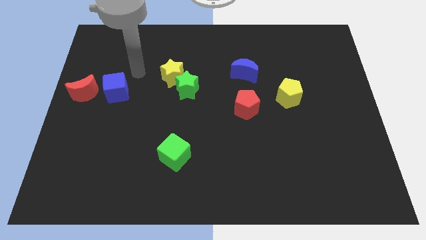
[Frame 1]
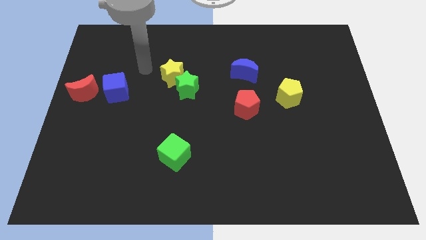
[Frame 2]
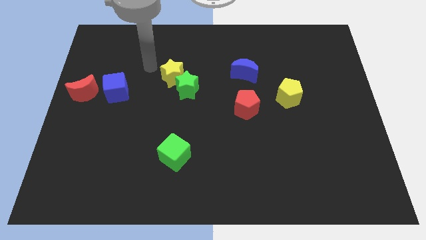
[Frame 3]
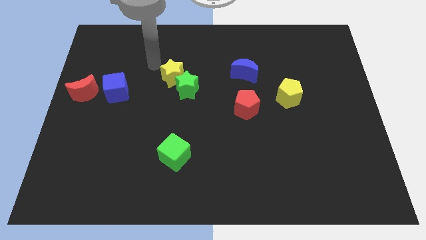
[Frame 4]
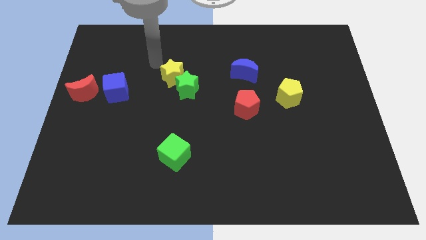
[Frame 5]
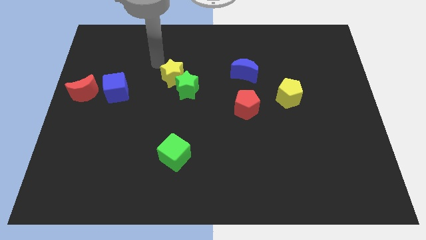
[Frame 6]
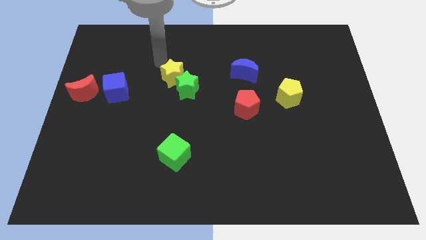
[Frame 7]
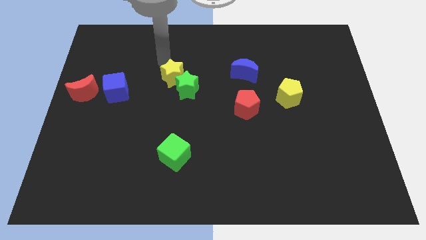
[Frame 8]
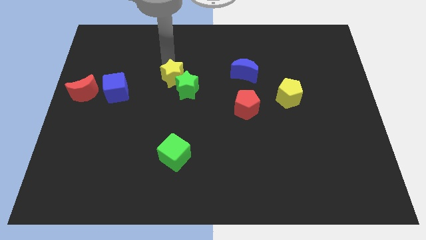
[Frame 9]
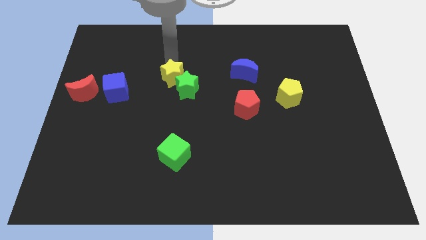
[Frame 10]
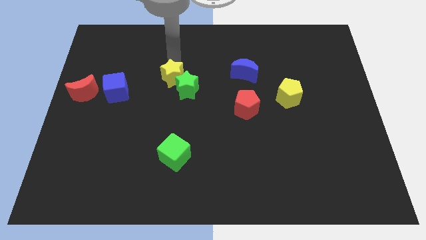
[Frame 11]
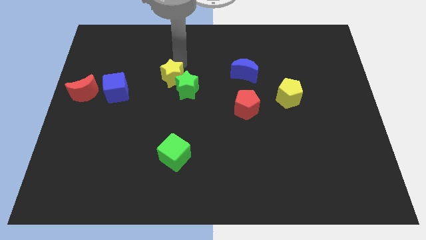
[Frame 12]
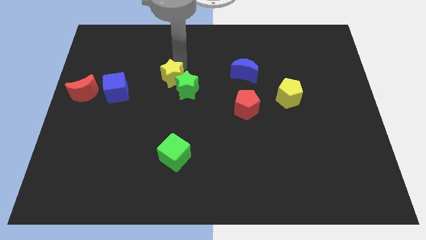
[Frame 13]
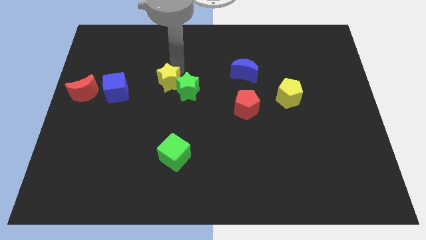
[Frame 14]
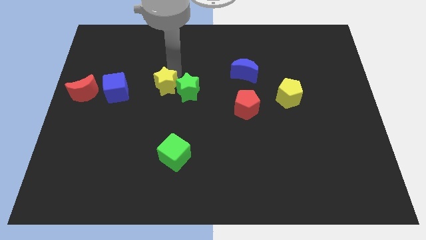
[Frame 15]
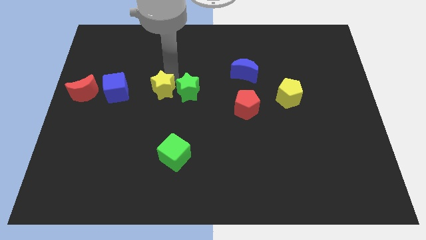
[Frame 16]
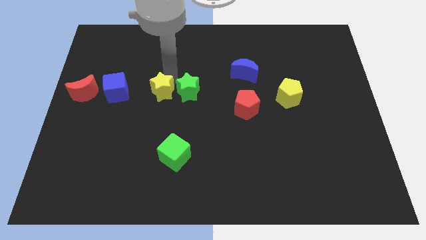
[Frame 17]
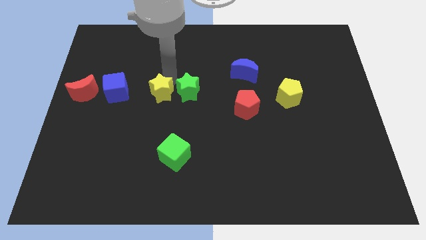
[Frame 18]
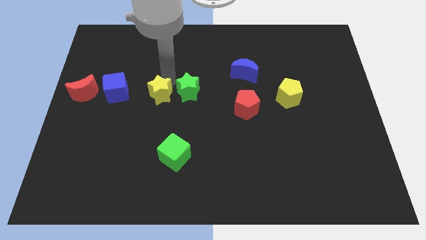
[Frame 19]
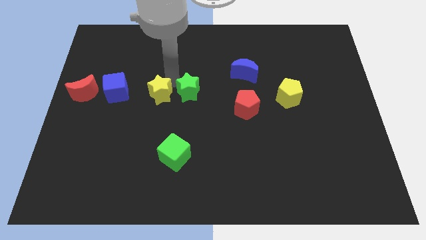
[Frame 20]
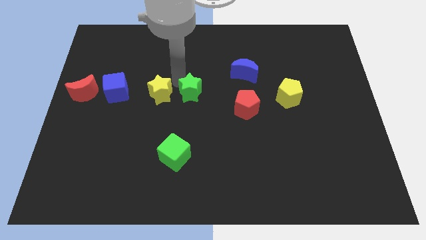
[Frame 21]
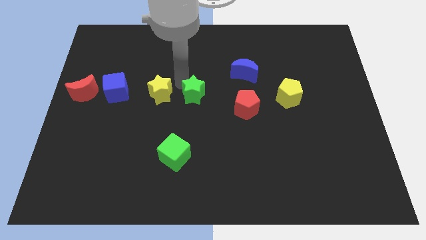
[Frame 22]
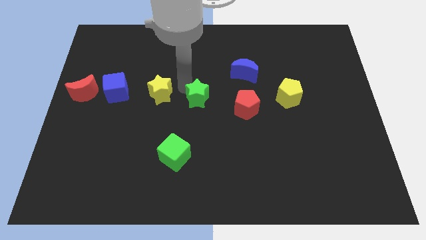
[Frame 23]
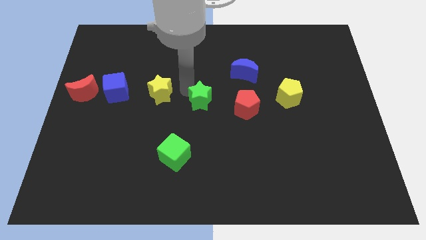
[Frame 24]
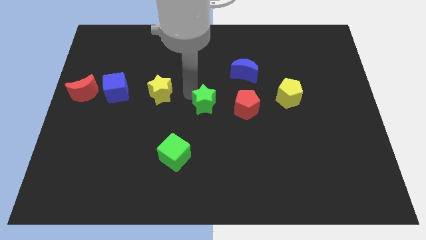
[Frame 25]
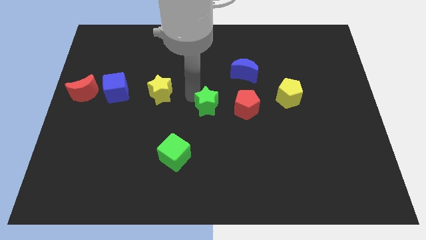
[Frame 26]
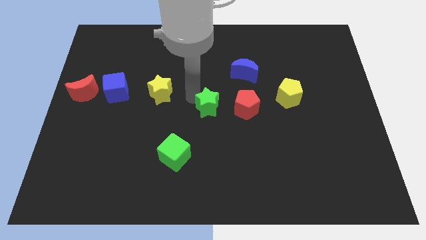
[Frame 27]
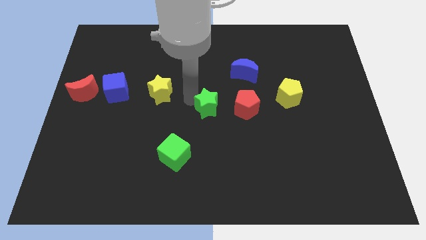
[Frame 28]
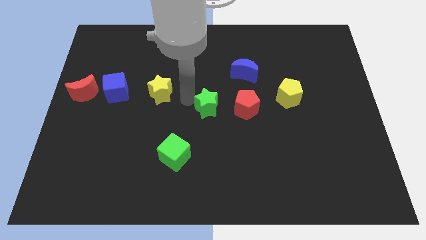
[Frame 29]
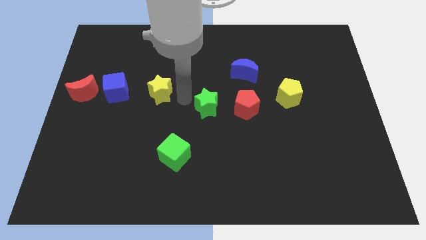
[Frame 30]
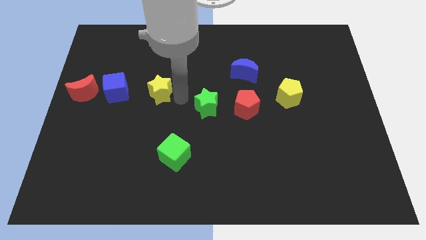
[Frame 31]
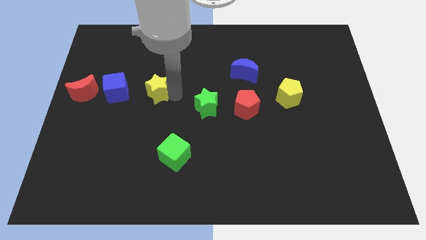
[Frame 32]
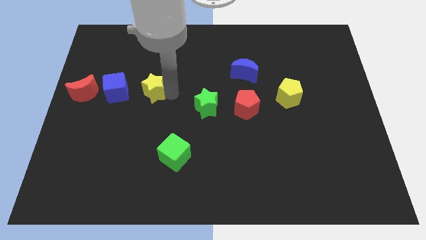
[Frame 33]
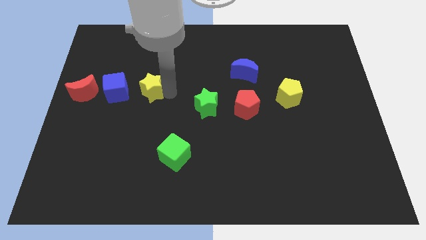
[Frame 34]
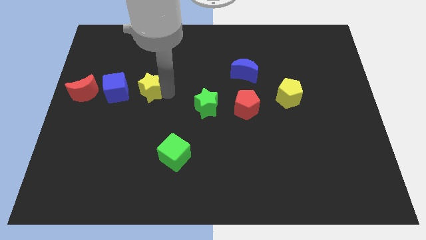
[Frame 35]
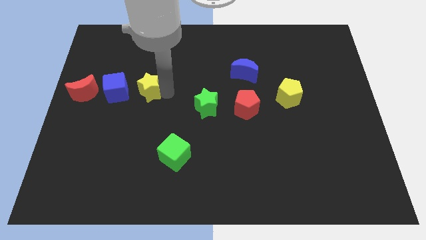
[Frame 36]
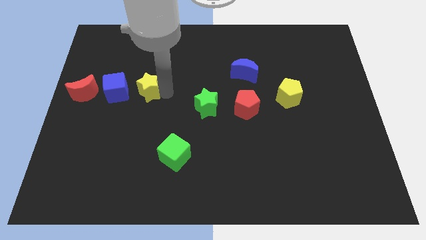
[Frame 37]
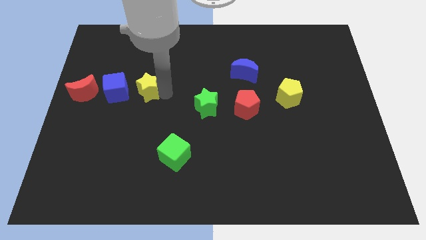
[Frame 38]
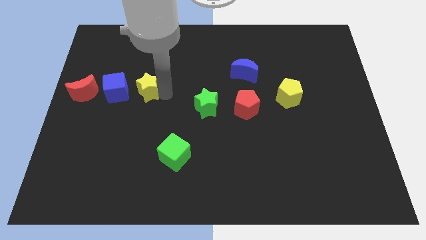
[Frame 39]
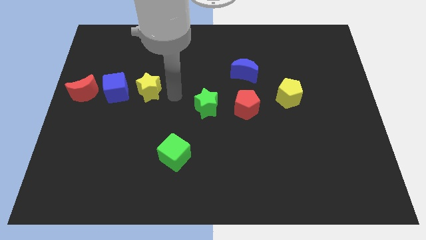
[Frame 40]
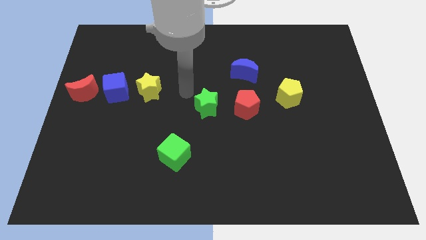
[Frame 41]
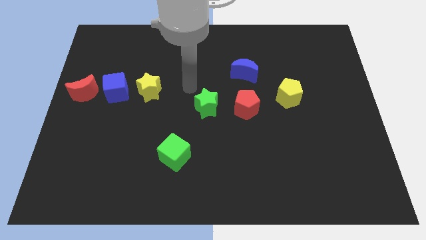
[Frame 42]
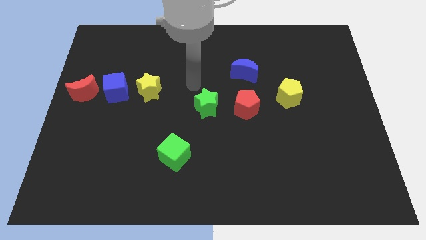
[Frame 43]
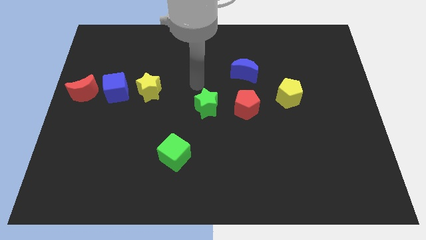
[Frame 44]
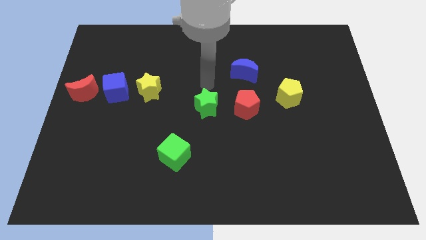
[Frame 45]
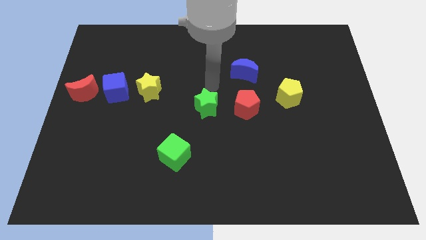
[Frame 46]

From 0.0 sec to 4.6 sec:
separate the yellow and green star

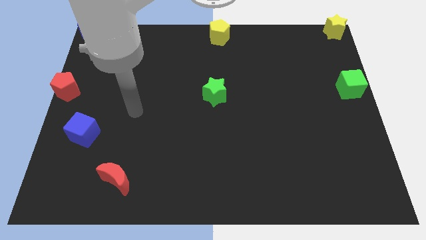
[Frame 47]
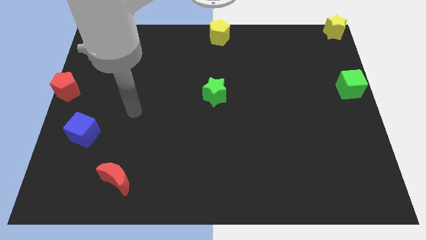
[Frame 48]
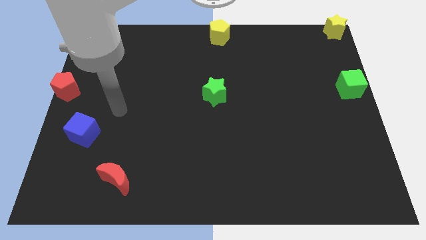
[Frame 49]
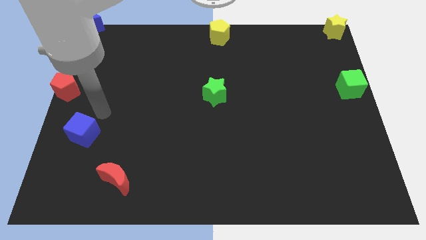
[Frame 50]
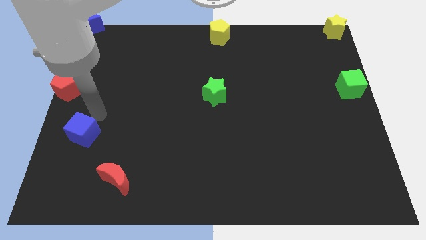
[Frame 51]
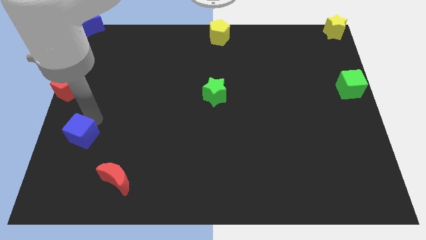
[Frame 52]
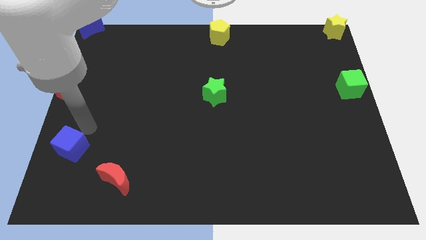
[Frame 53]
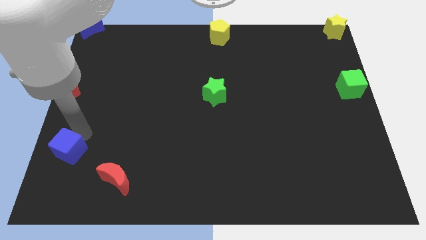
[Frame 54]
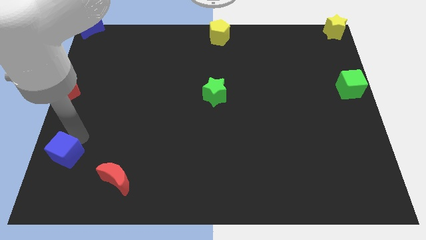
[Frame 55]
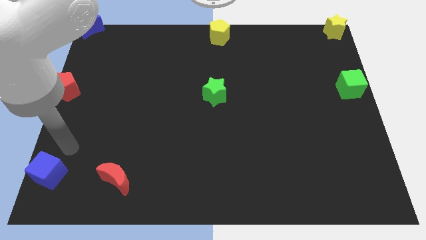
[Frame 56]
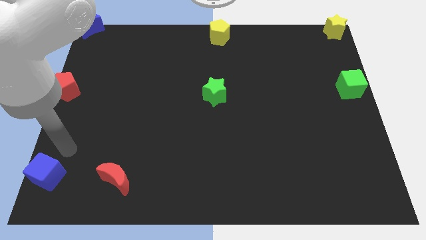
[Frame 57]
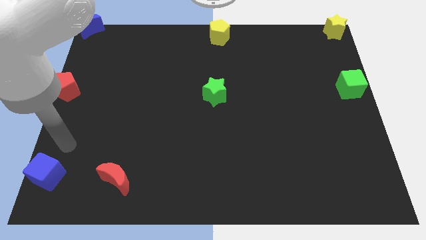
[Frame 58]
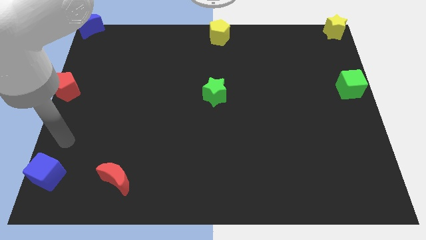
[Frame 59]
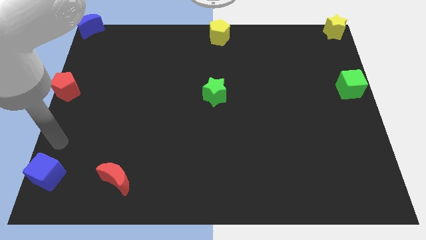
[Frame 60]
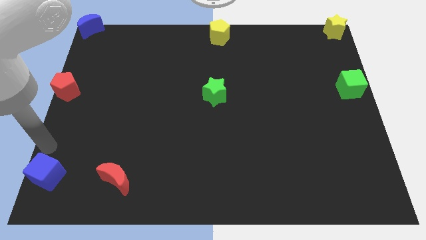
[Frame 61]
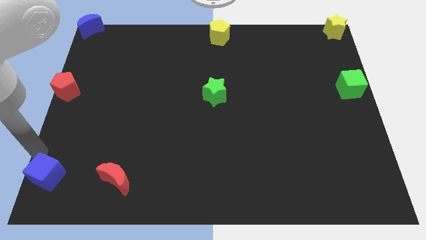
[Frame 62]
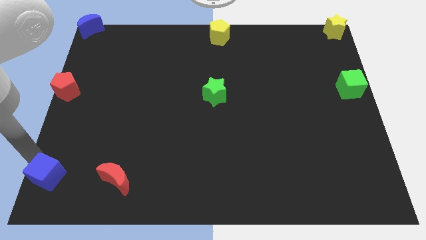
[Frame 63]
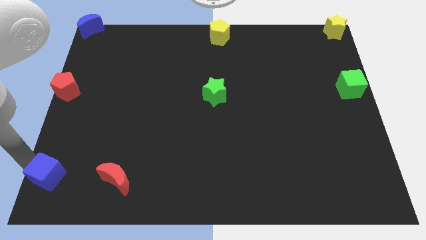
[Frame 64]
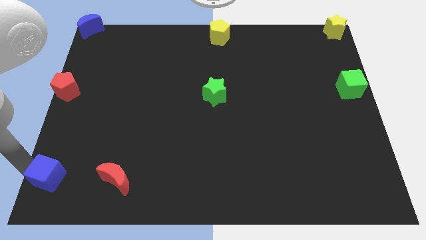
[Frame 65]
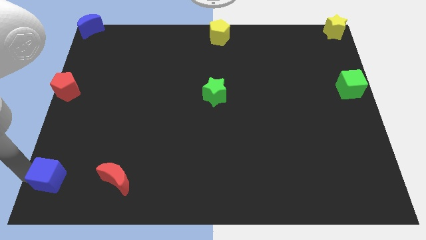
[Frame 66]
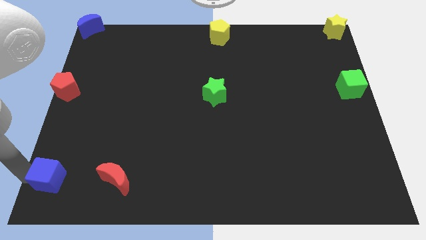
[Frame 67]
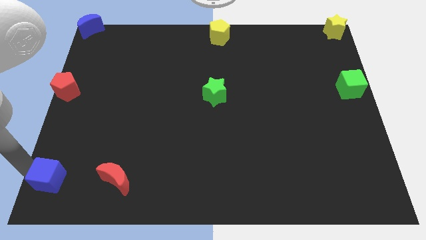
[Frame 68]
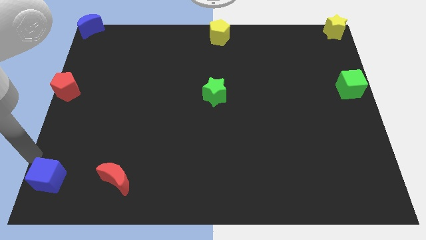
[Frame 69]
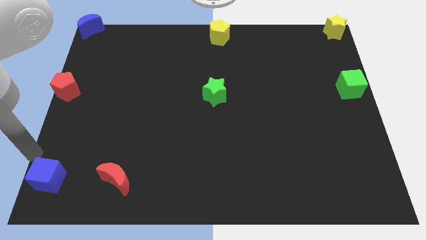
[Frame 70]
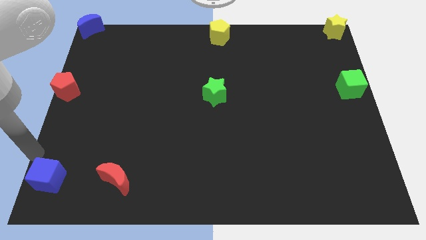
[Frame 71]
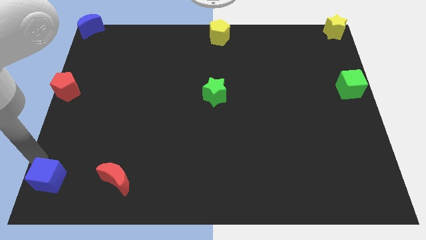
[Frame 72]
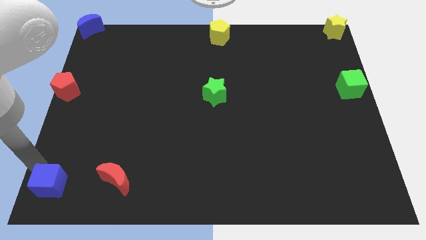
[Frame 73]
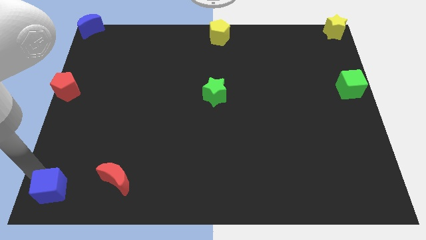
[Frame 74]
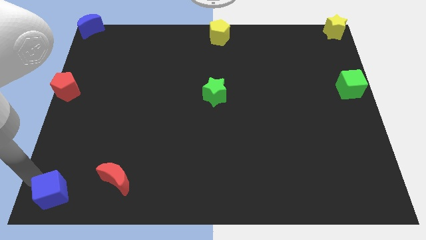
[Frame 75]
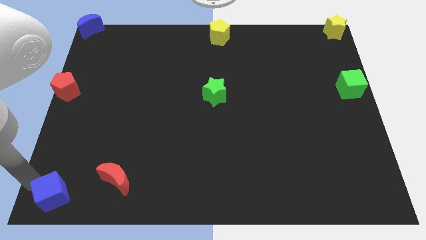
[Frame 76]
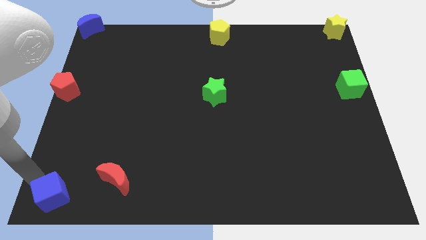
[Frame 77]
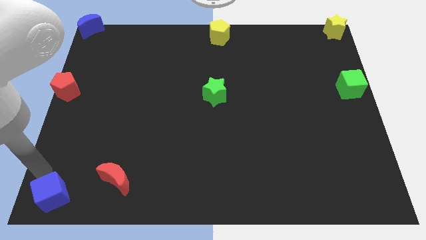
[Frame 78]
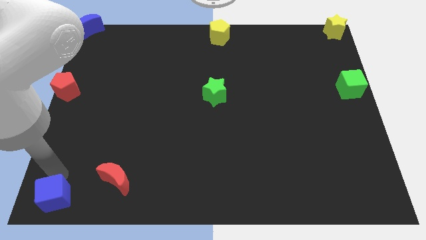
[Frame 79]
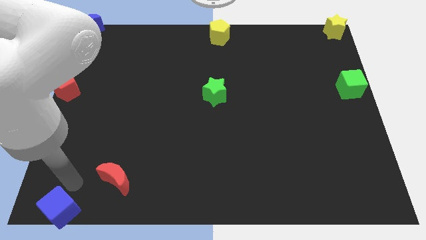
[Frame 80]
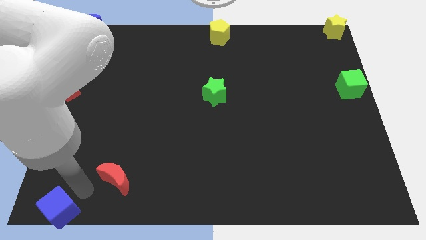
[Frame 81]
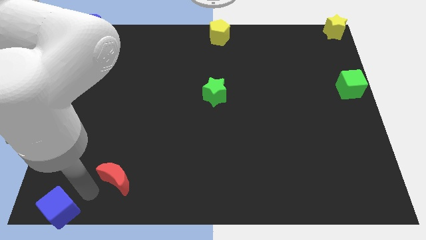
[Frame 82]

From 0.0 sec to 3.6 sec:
place blue cube towards bottom left corner

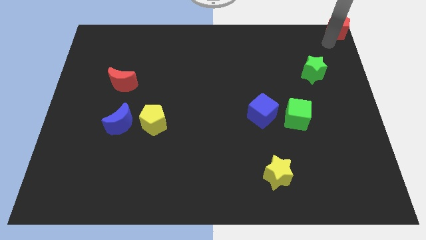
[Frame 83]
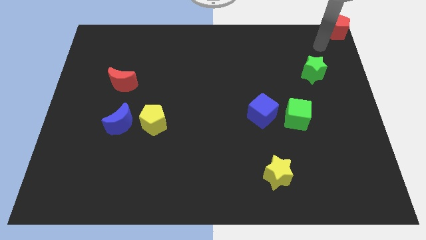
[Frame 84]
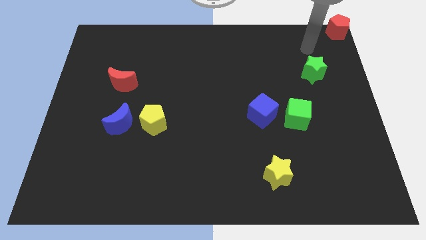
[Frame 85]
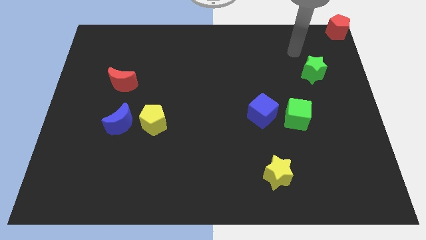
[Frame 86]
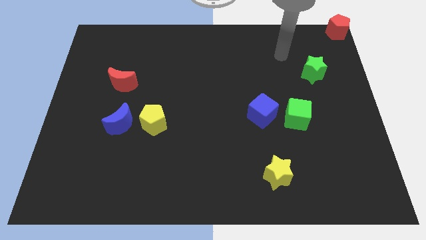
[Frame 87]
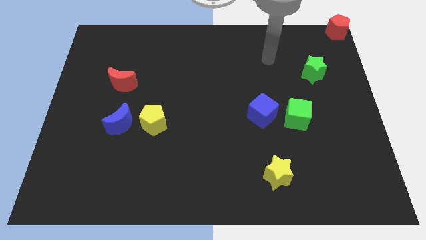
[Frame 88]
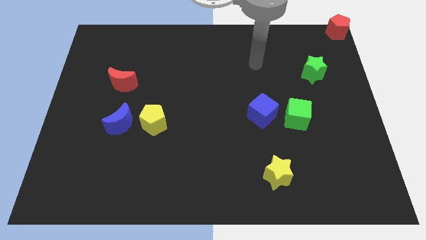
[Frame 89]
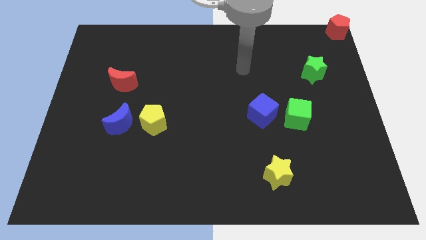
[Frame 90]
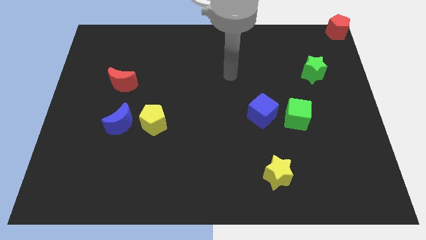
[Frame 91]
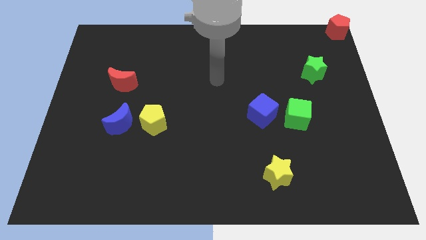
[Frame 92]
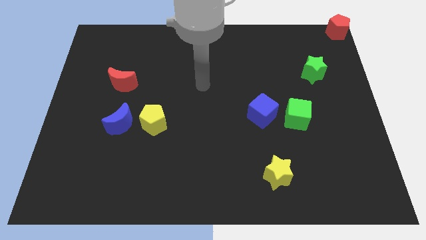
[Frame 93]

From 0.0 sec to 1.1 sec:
move your arm away from the red pentagon
